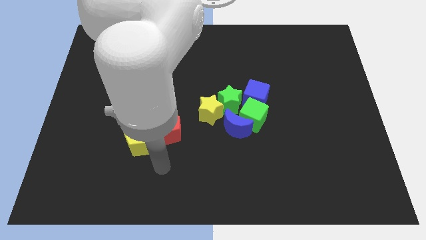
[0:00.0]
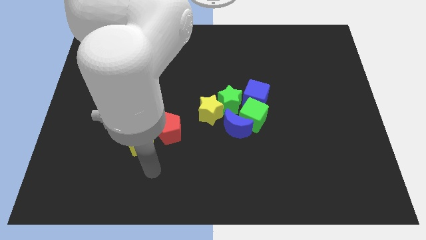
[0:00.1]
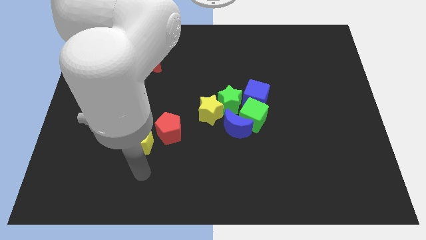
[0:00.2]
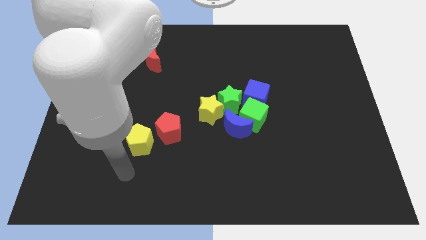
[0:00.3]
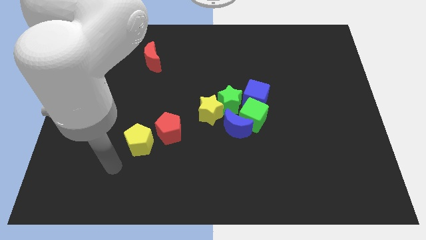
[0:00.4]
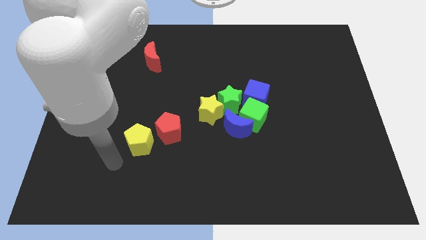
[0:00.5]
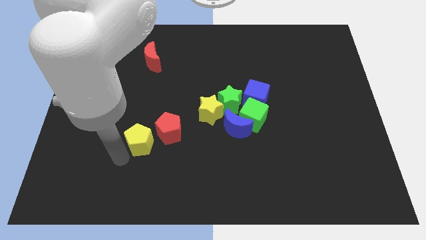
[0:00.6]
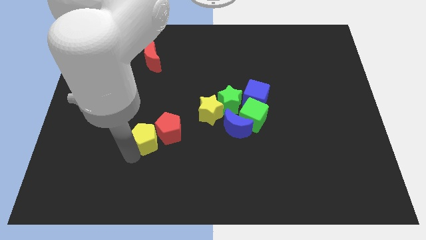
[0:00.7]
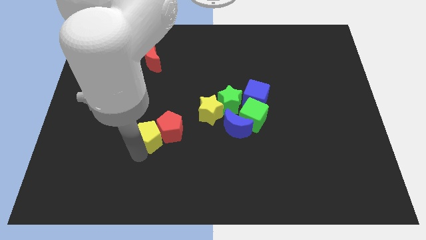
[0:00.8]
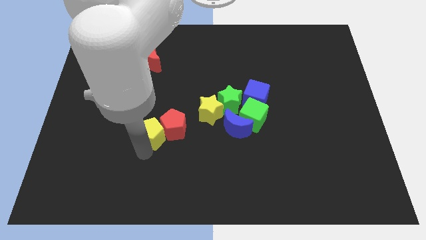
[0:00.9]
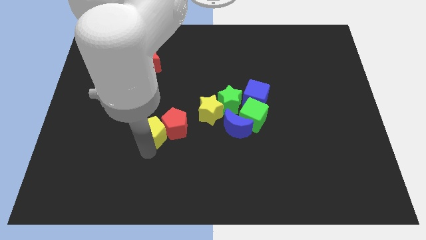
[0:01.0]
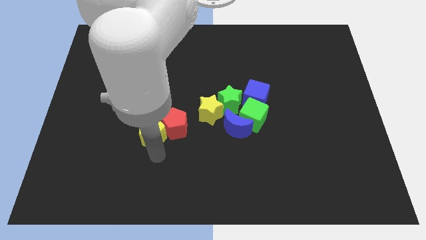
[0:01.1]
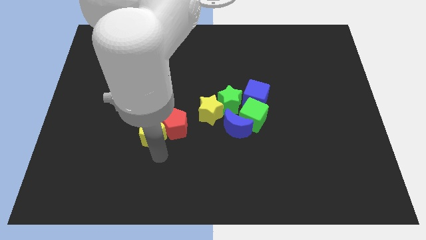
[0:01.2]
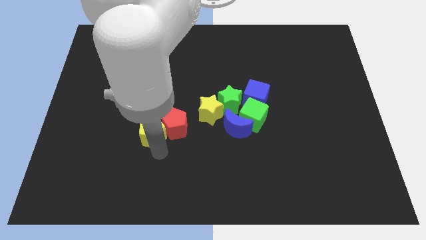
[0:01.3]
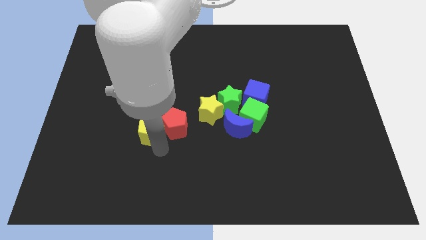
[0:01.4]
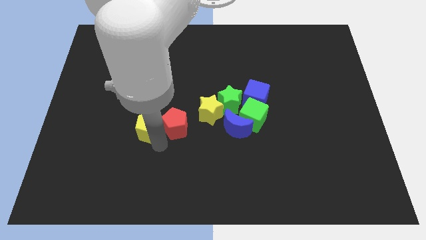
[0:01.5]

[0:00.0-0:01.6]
push the yellow pentagon into red pentagon

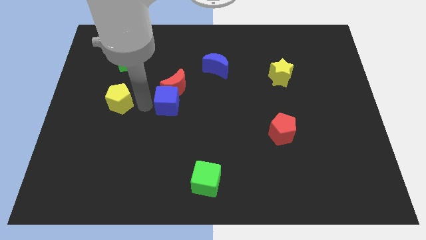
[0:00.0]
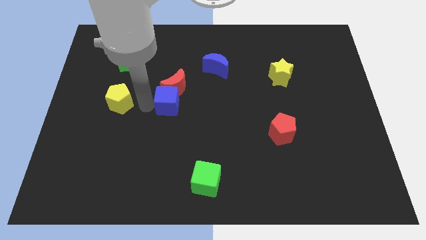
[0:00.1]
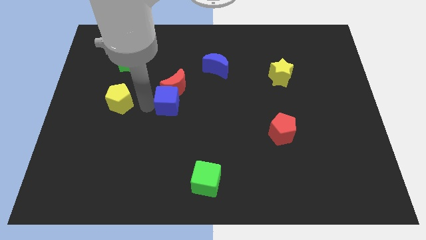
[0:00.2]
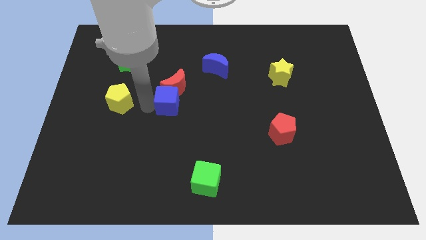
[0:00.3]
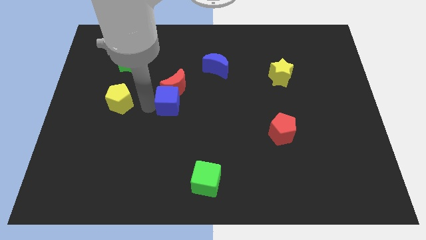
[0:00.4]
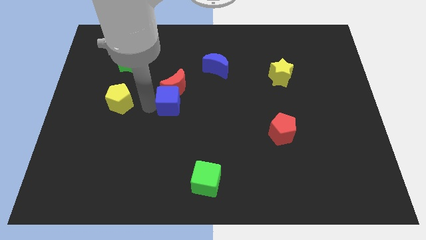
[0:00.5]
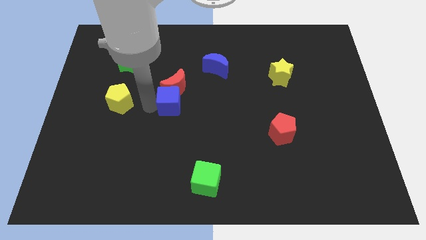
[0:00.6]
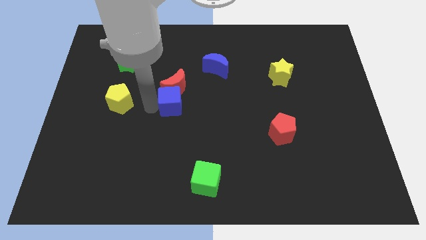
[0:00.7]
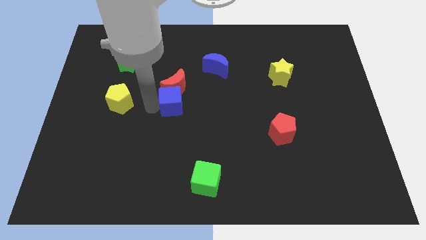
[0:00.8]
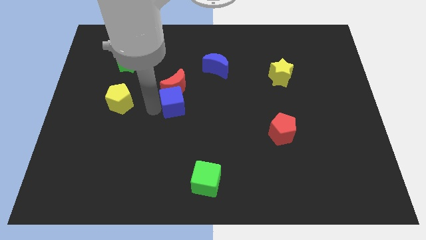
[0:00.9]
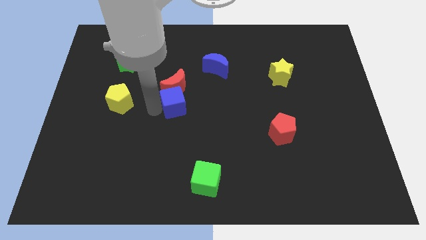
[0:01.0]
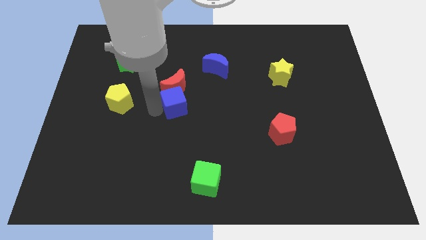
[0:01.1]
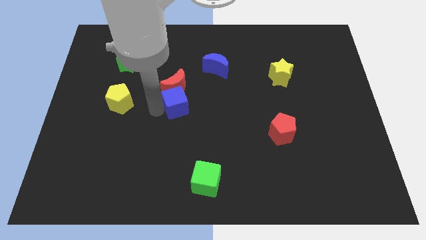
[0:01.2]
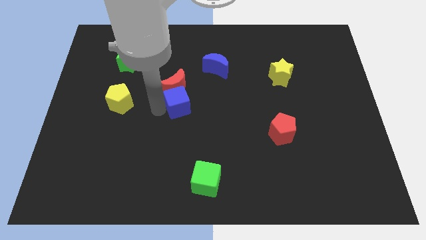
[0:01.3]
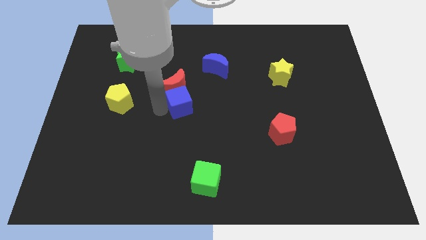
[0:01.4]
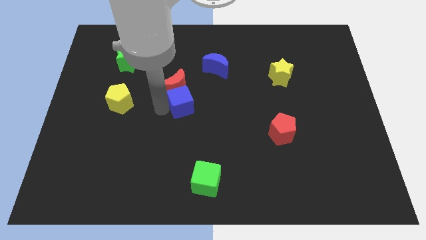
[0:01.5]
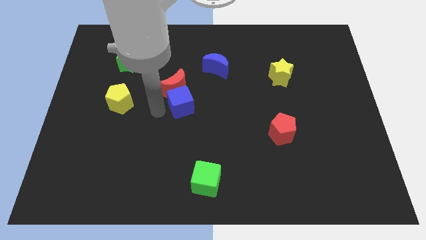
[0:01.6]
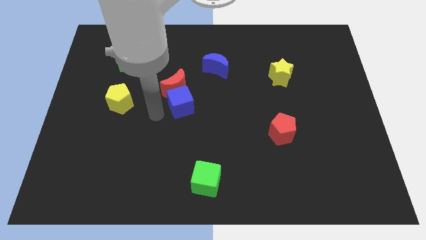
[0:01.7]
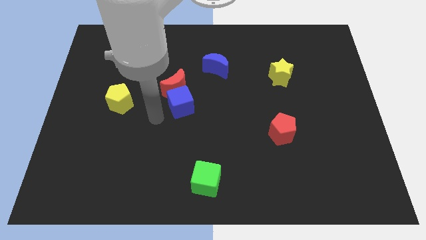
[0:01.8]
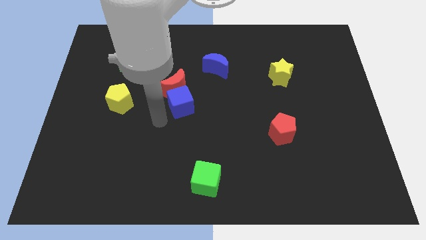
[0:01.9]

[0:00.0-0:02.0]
slide the blue cube slightly to the right

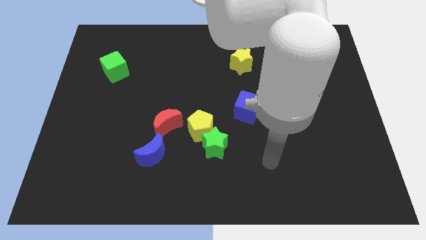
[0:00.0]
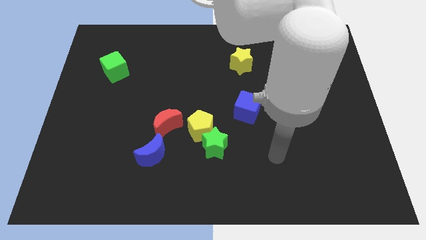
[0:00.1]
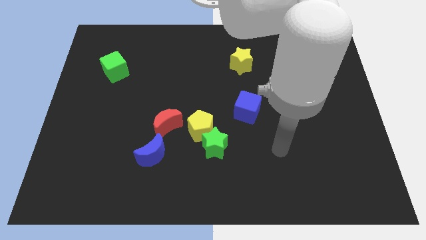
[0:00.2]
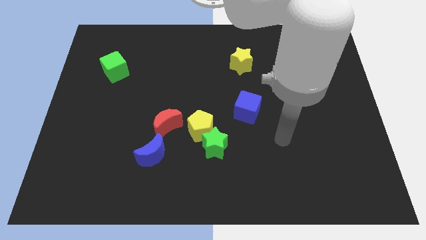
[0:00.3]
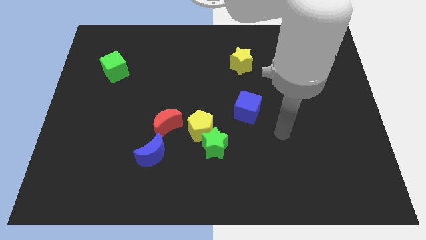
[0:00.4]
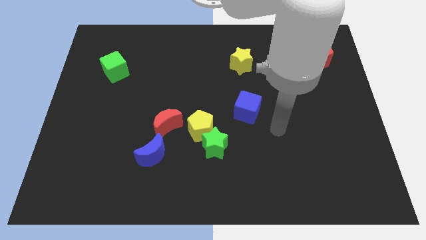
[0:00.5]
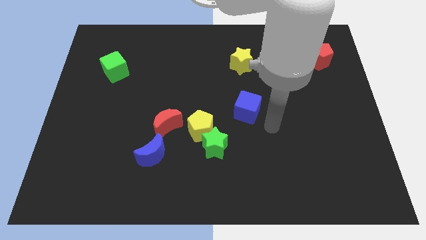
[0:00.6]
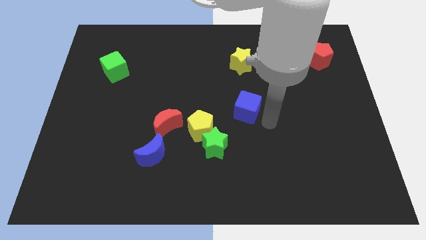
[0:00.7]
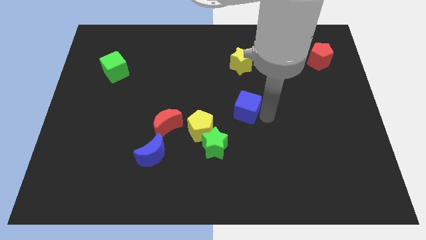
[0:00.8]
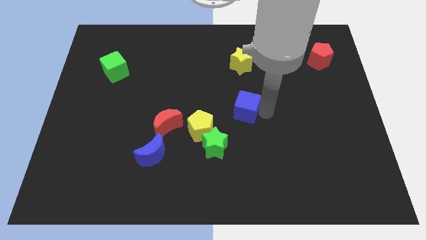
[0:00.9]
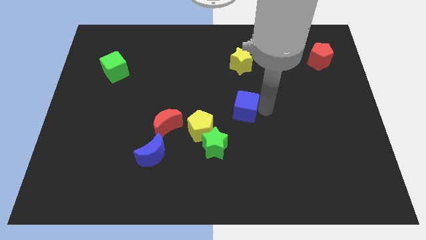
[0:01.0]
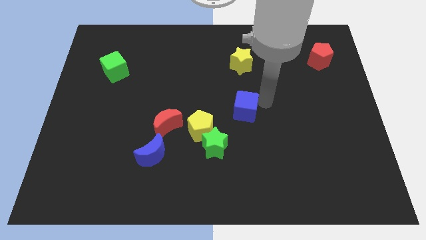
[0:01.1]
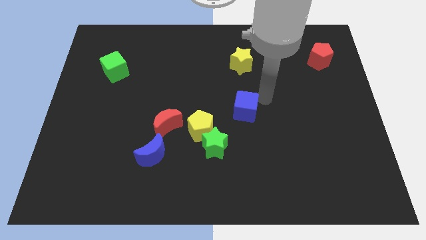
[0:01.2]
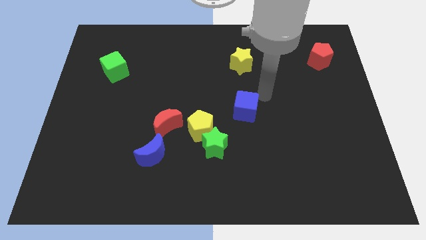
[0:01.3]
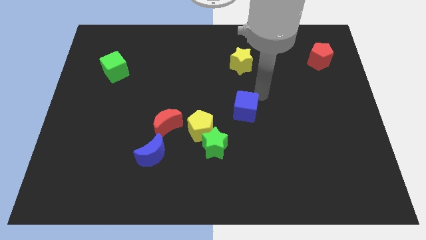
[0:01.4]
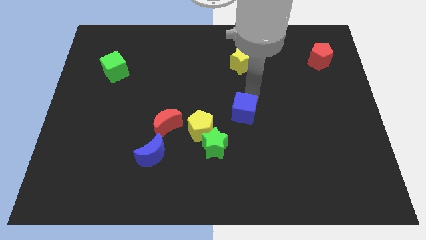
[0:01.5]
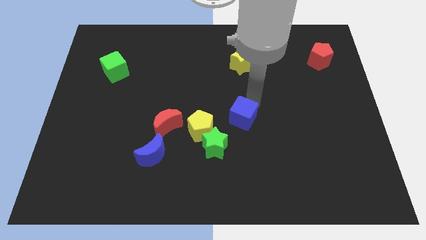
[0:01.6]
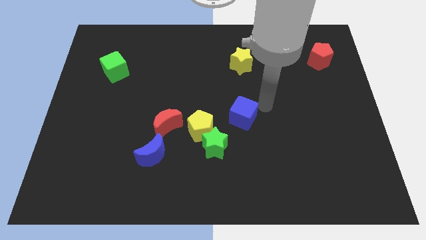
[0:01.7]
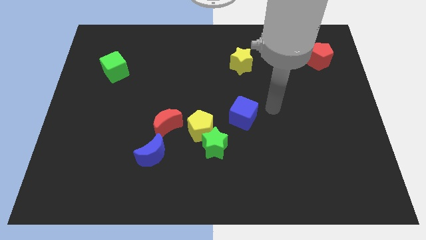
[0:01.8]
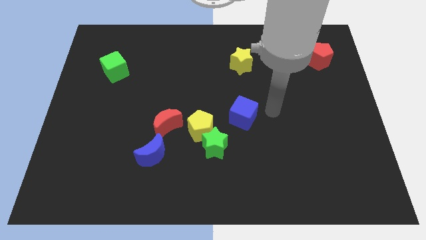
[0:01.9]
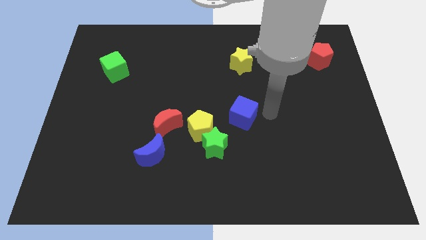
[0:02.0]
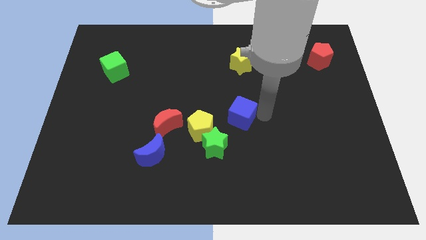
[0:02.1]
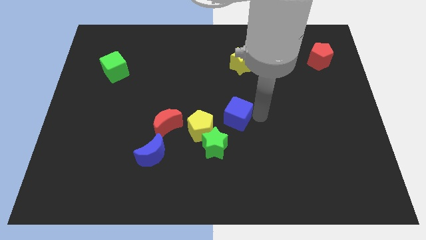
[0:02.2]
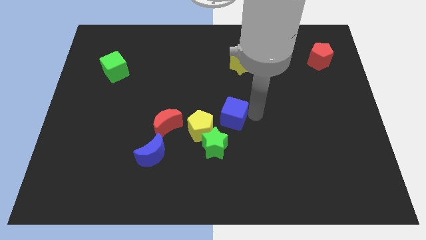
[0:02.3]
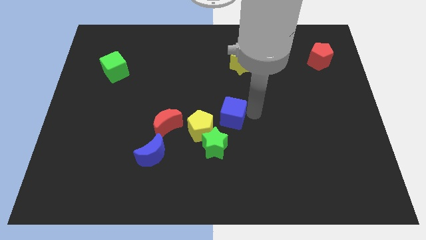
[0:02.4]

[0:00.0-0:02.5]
move the blue cube close to the yellow pentagon

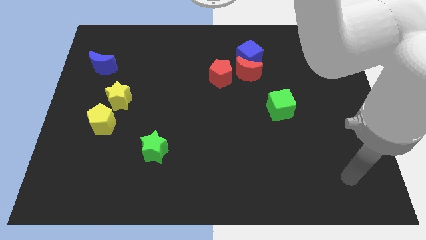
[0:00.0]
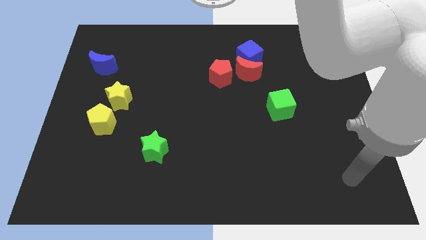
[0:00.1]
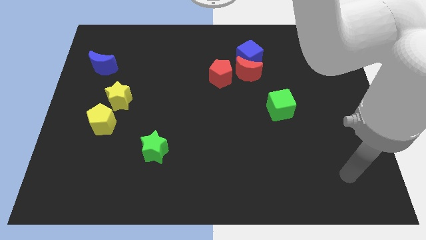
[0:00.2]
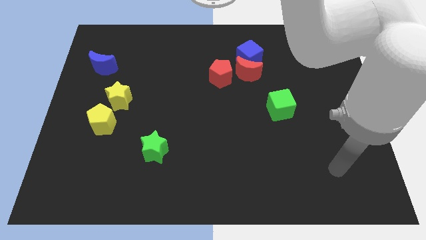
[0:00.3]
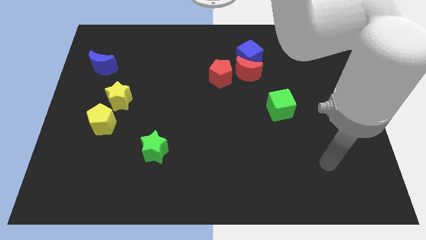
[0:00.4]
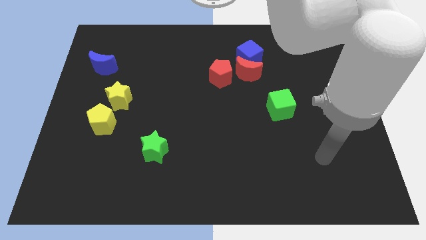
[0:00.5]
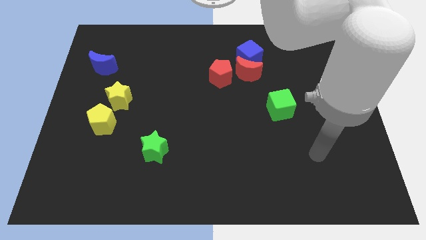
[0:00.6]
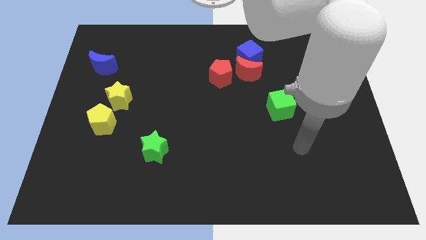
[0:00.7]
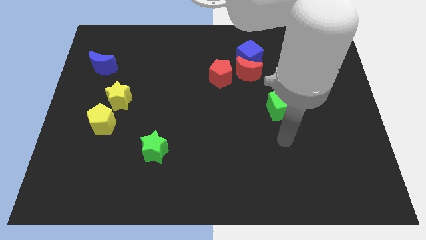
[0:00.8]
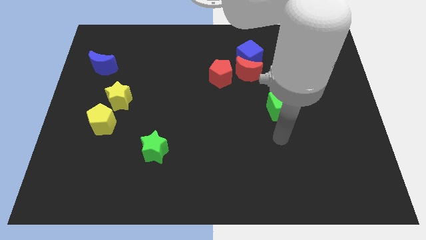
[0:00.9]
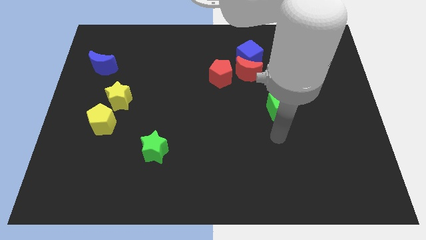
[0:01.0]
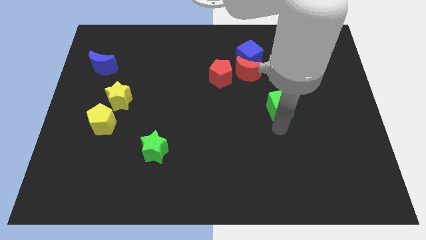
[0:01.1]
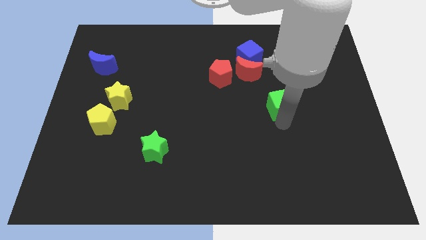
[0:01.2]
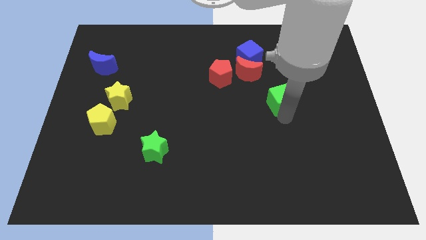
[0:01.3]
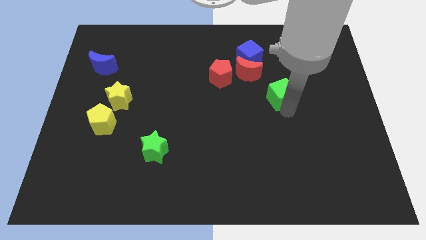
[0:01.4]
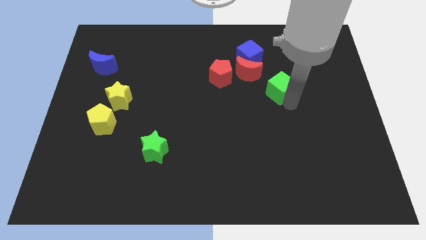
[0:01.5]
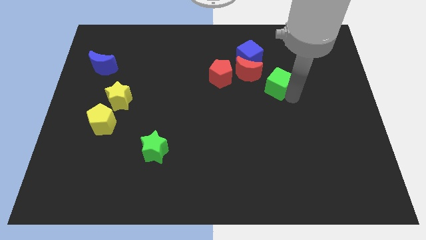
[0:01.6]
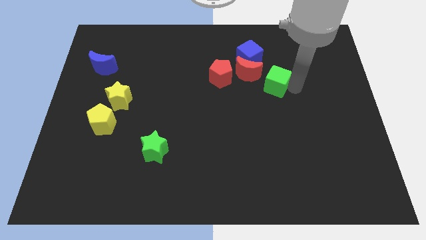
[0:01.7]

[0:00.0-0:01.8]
slide the green cube to the right of red moon

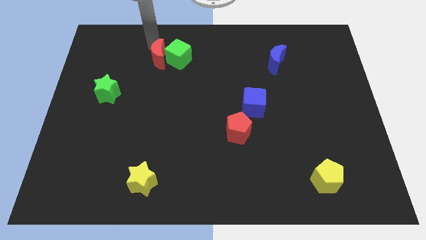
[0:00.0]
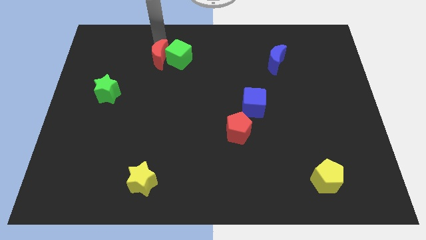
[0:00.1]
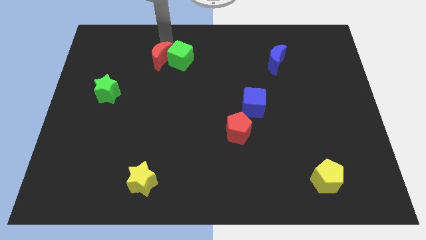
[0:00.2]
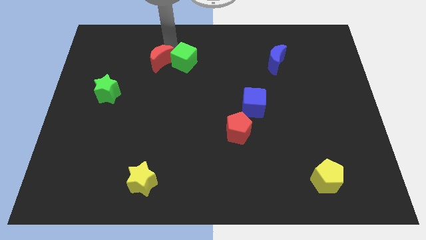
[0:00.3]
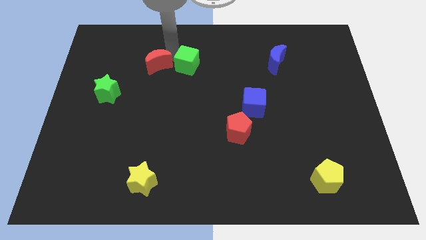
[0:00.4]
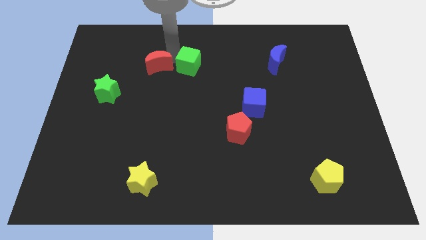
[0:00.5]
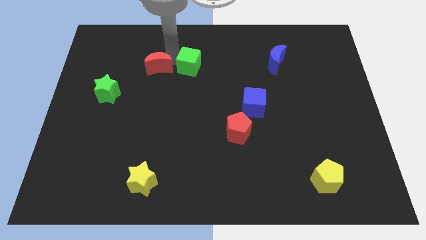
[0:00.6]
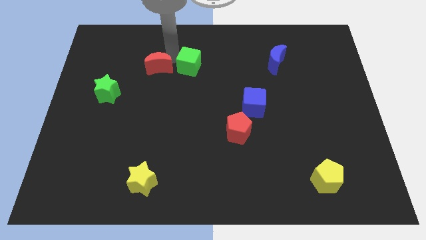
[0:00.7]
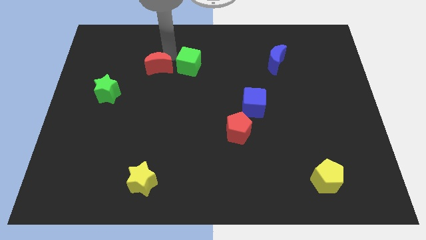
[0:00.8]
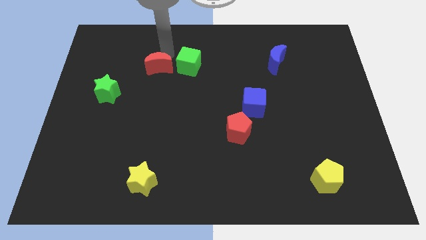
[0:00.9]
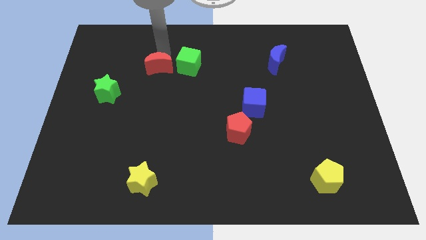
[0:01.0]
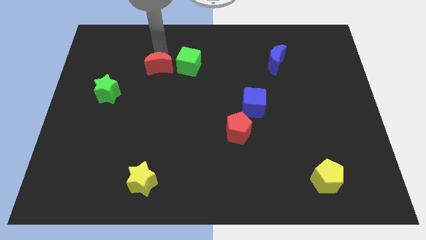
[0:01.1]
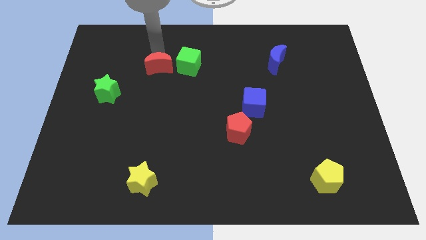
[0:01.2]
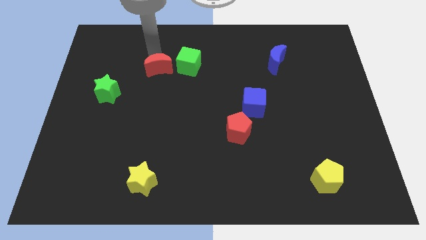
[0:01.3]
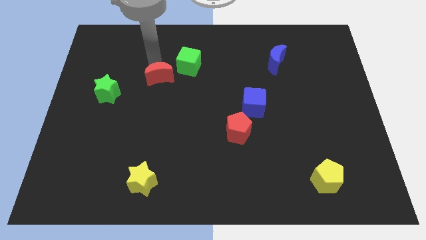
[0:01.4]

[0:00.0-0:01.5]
move the red crescent towards bottm of the board
